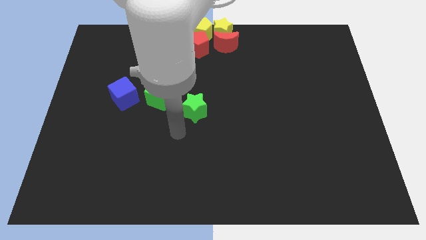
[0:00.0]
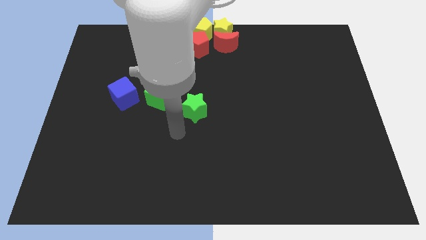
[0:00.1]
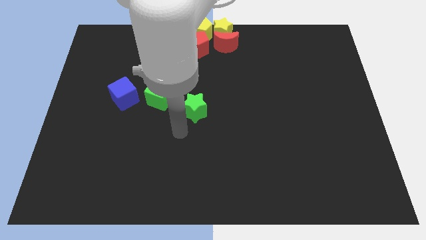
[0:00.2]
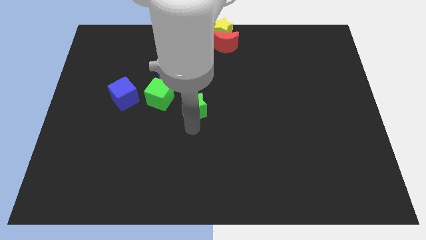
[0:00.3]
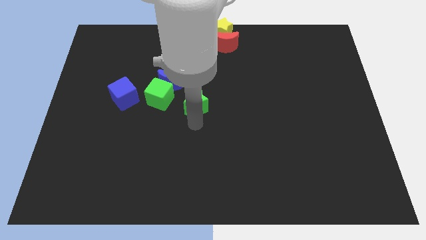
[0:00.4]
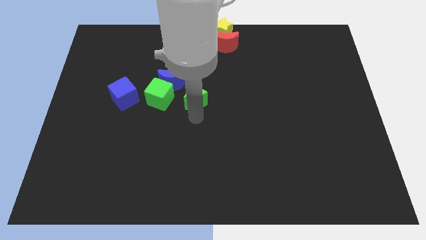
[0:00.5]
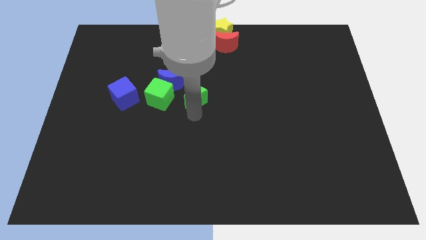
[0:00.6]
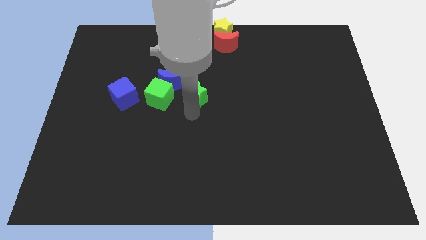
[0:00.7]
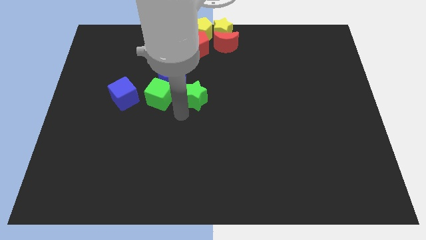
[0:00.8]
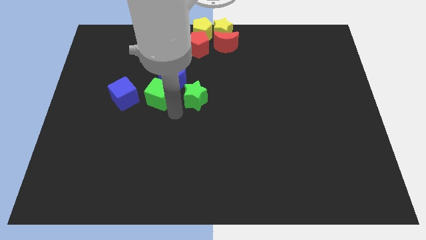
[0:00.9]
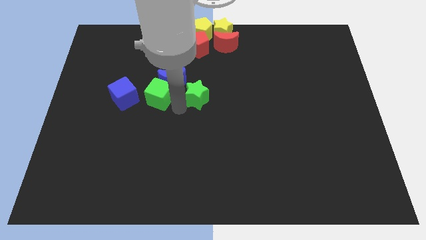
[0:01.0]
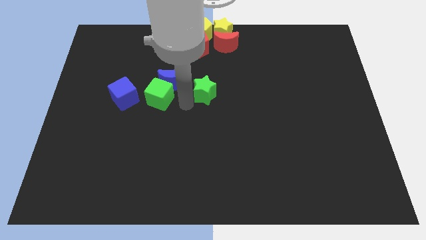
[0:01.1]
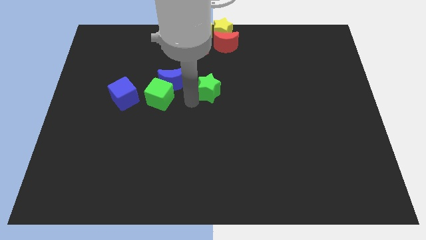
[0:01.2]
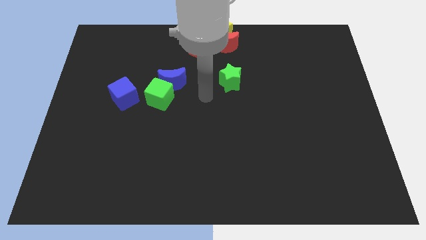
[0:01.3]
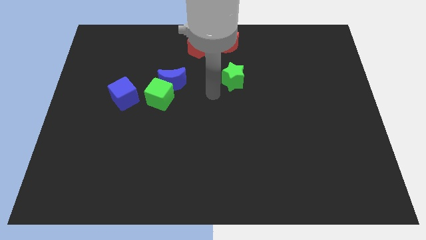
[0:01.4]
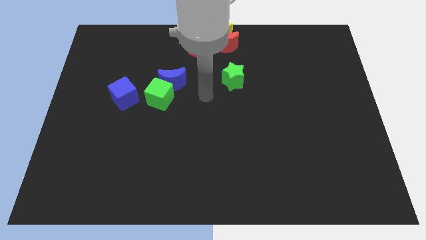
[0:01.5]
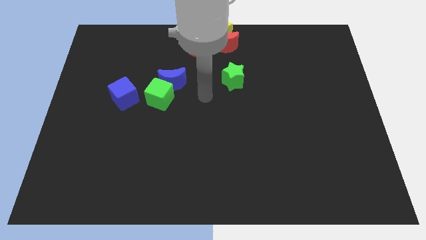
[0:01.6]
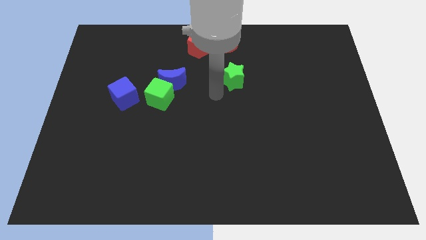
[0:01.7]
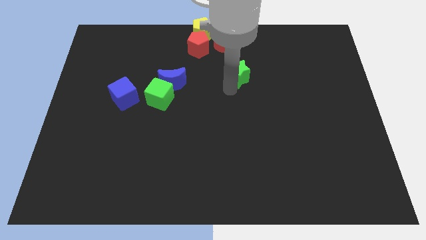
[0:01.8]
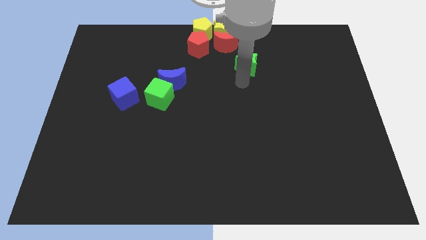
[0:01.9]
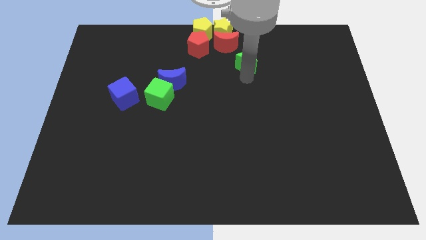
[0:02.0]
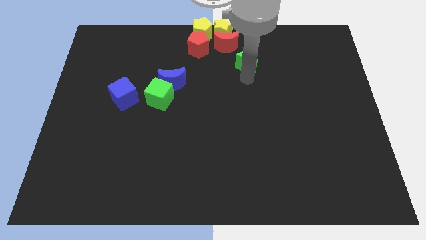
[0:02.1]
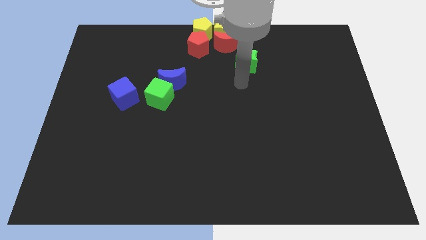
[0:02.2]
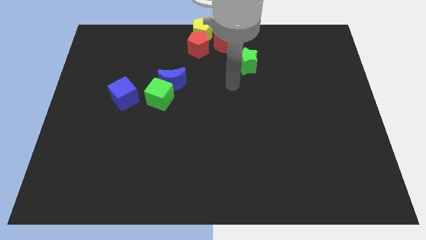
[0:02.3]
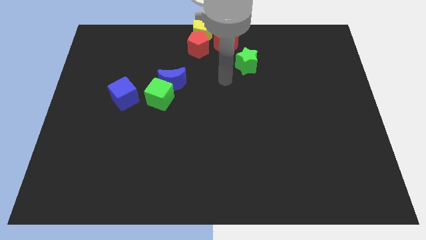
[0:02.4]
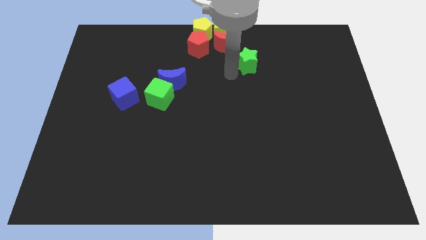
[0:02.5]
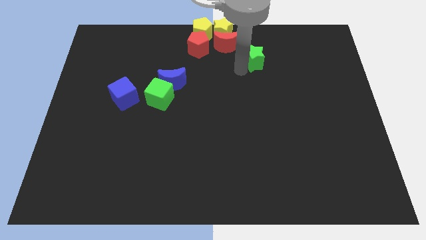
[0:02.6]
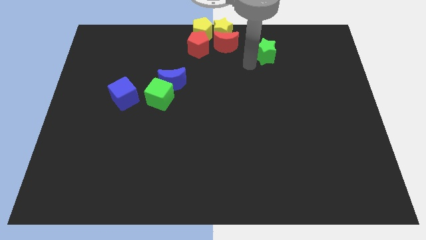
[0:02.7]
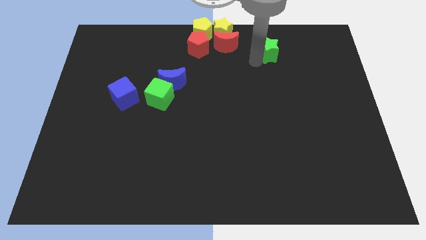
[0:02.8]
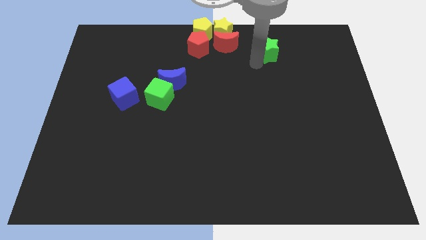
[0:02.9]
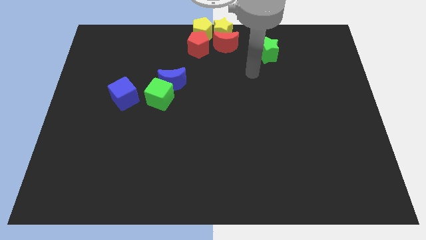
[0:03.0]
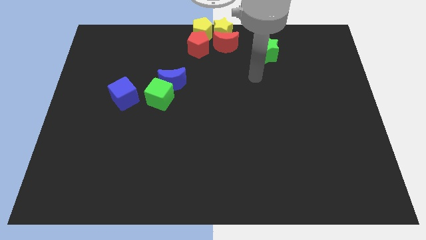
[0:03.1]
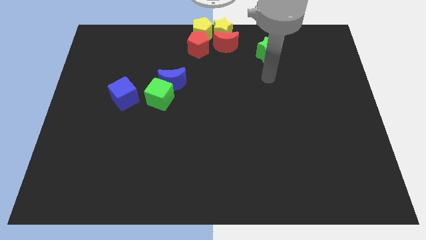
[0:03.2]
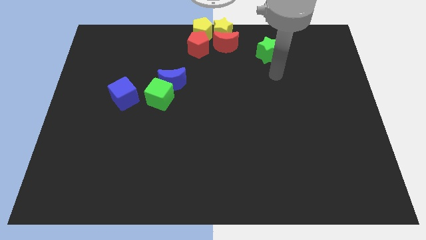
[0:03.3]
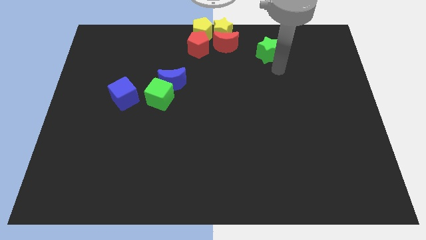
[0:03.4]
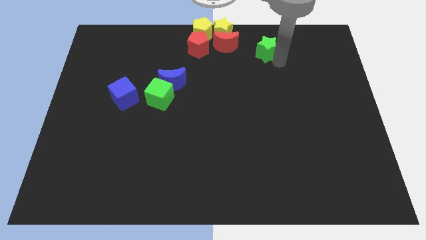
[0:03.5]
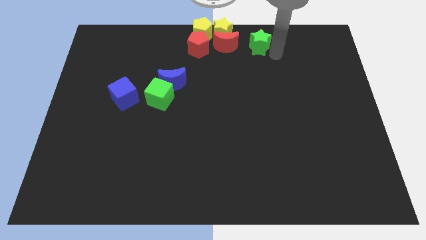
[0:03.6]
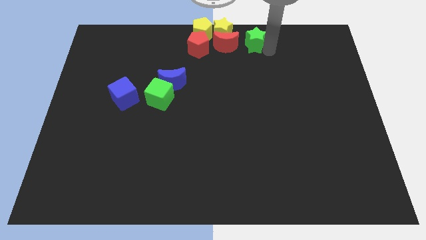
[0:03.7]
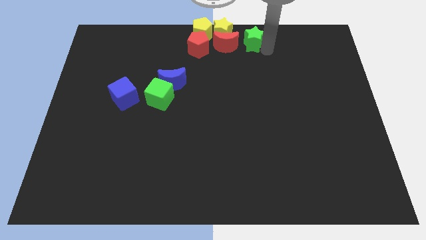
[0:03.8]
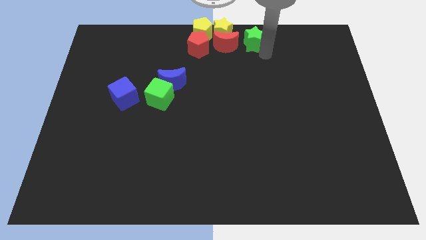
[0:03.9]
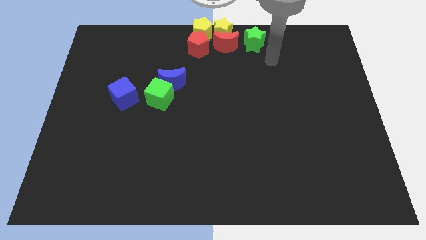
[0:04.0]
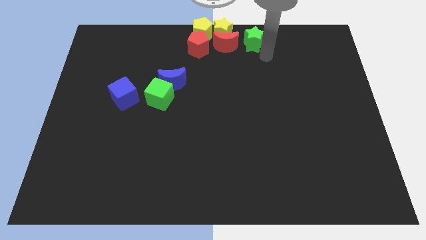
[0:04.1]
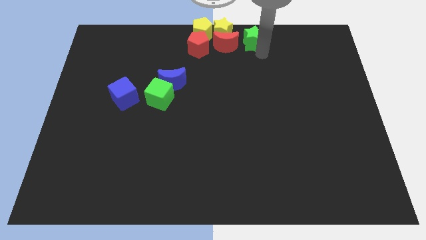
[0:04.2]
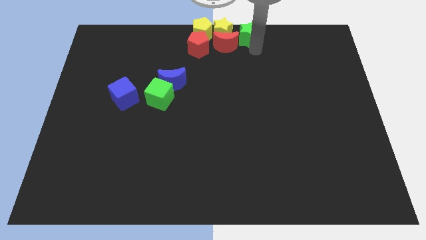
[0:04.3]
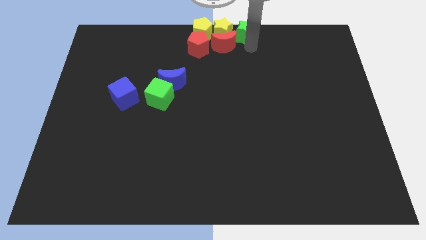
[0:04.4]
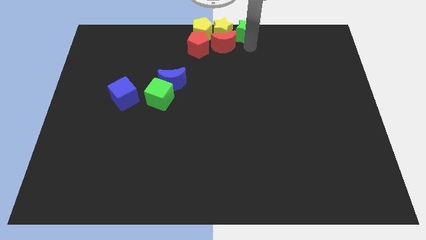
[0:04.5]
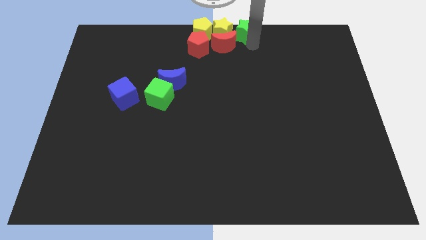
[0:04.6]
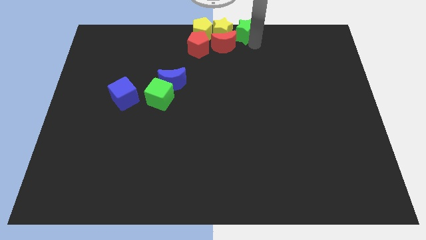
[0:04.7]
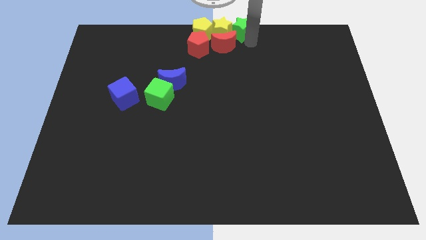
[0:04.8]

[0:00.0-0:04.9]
move green star to the top center of the board

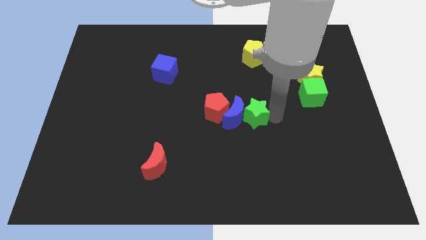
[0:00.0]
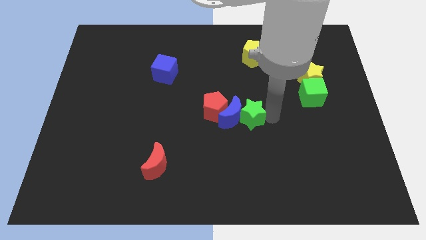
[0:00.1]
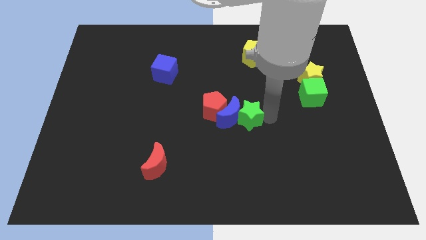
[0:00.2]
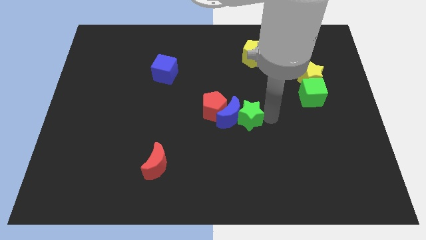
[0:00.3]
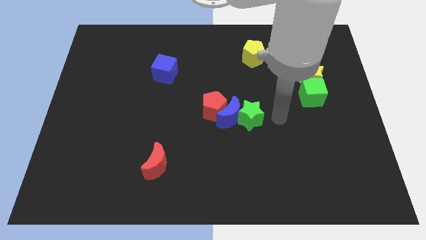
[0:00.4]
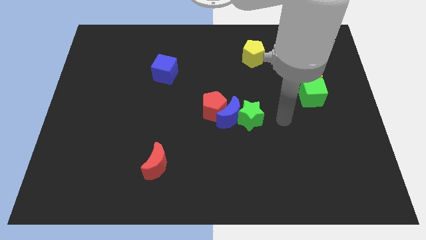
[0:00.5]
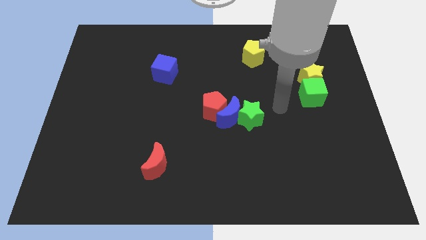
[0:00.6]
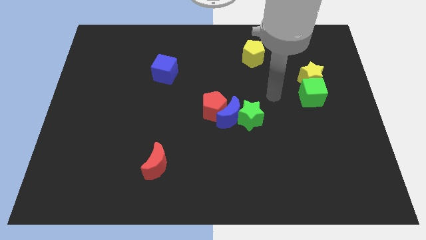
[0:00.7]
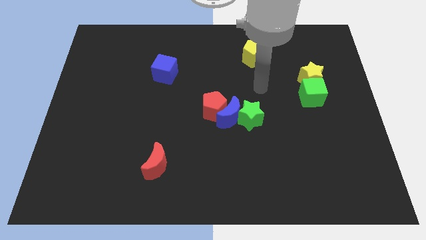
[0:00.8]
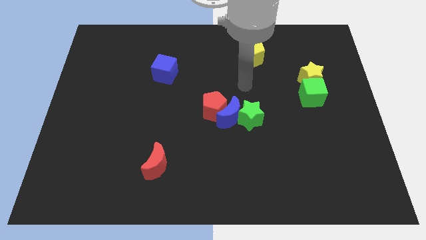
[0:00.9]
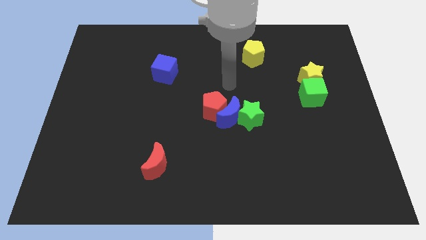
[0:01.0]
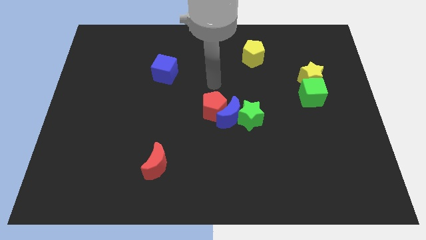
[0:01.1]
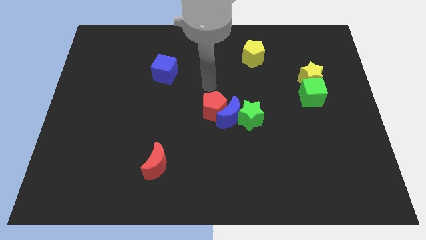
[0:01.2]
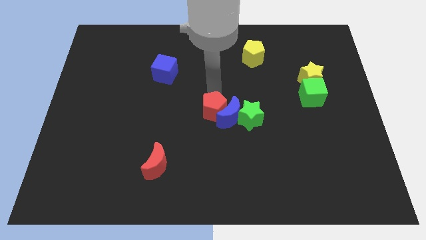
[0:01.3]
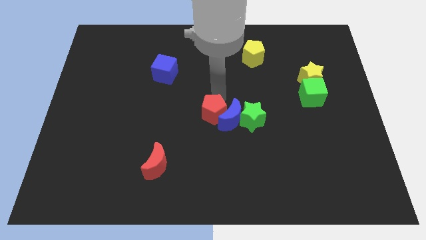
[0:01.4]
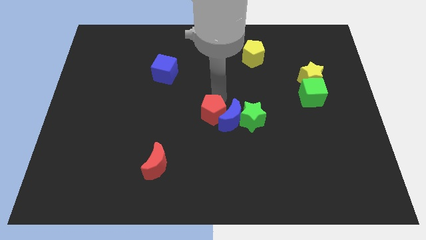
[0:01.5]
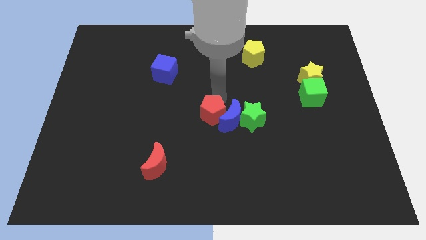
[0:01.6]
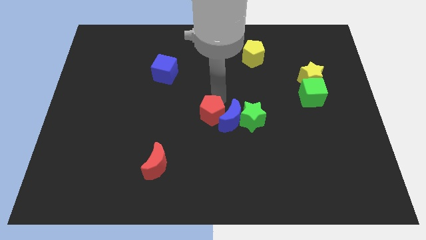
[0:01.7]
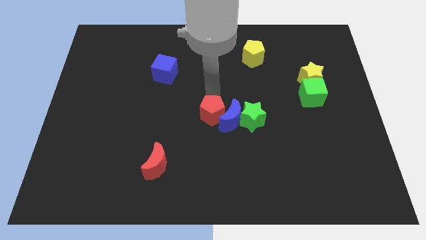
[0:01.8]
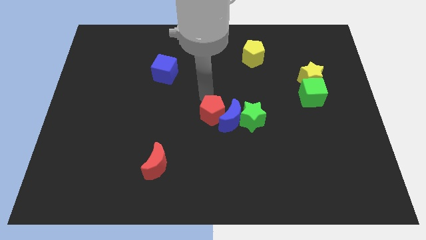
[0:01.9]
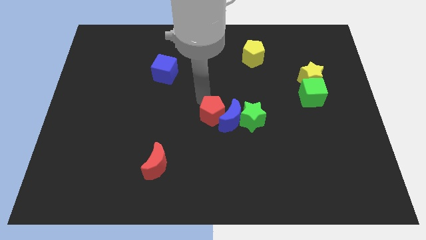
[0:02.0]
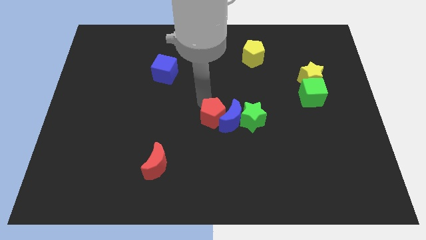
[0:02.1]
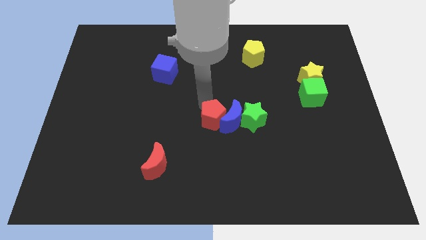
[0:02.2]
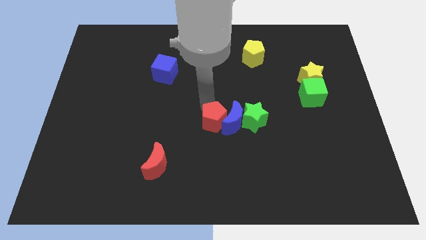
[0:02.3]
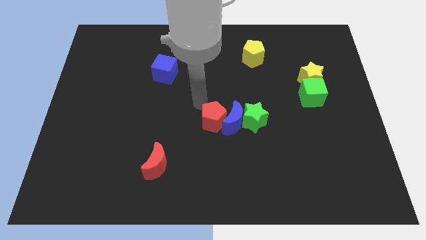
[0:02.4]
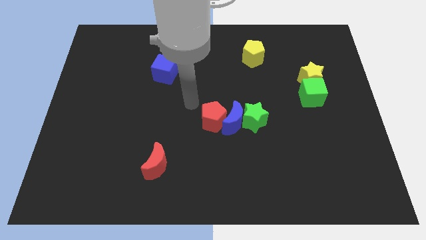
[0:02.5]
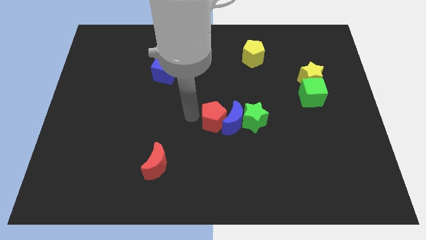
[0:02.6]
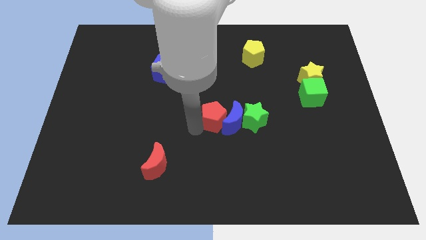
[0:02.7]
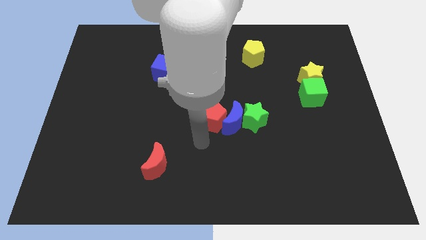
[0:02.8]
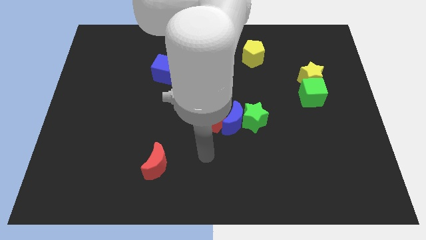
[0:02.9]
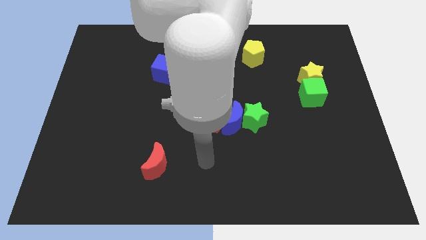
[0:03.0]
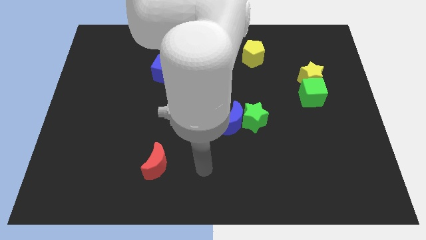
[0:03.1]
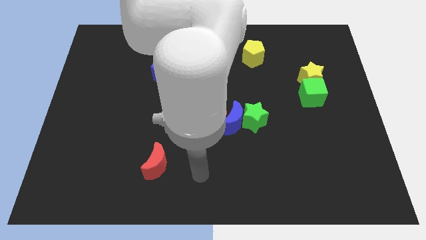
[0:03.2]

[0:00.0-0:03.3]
push the red pentagon down slightly

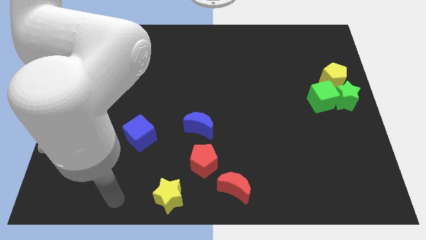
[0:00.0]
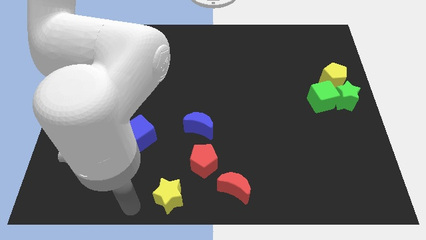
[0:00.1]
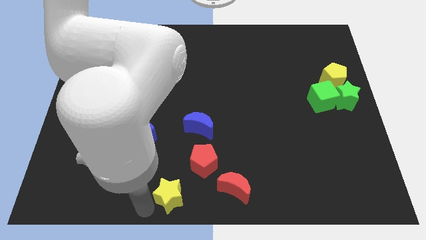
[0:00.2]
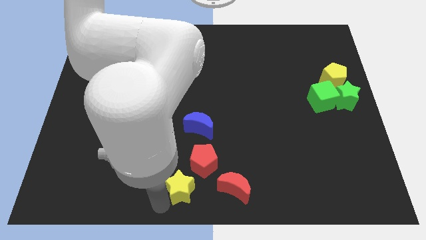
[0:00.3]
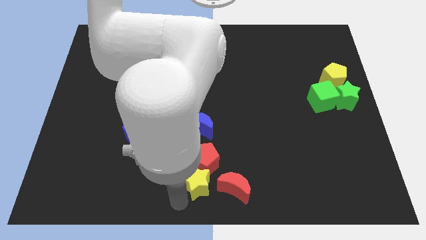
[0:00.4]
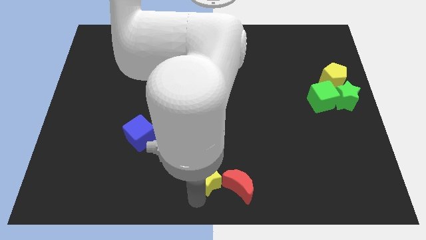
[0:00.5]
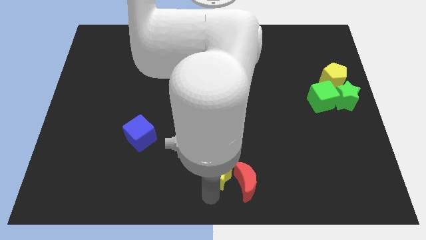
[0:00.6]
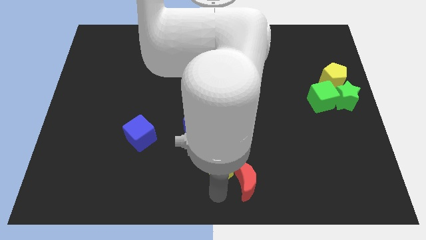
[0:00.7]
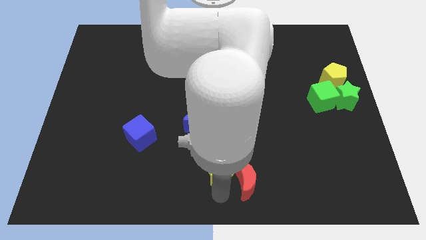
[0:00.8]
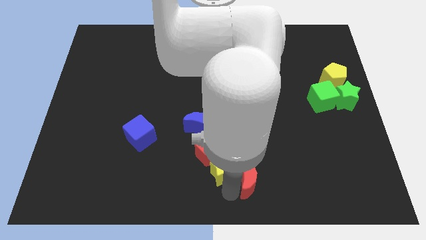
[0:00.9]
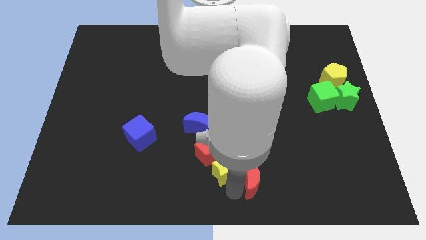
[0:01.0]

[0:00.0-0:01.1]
push the yellow star into the red pentagon
